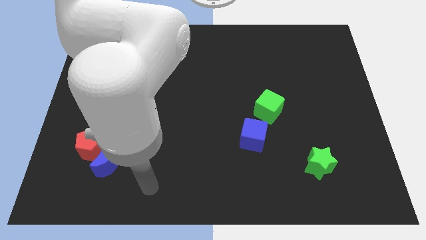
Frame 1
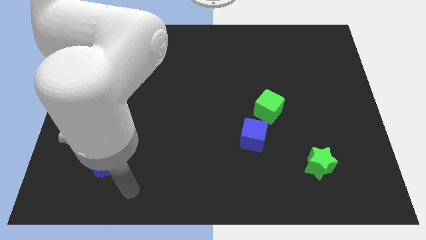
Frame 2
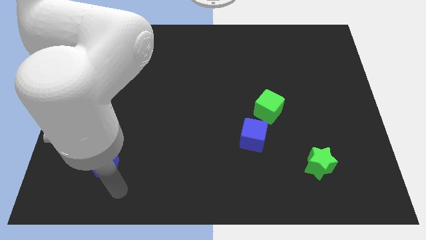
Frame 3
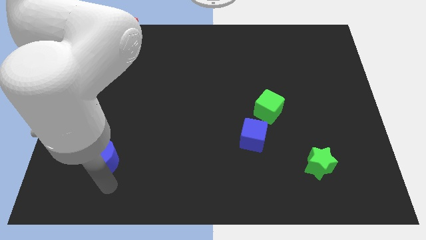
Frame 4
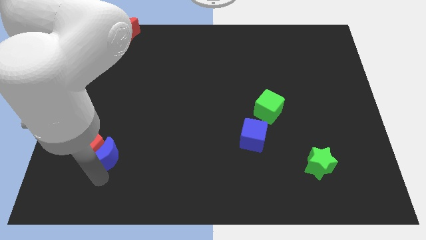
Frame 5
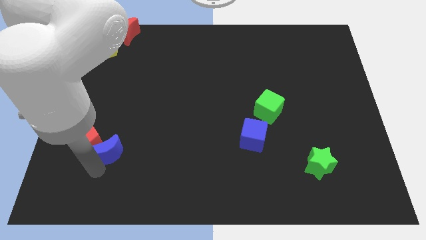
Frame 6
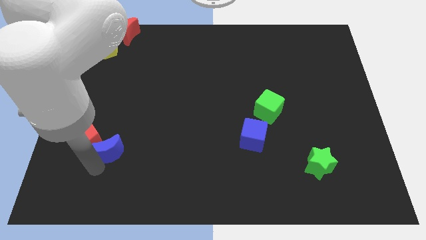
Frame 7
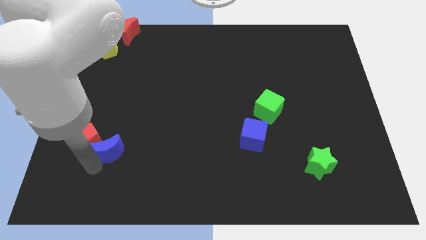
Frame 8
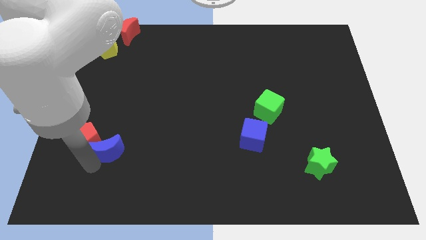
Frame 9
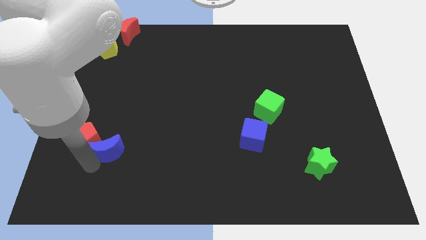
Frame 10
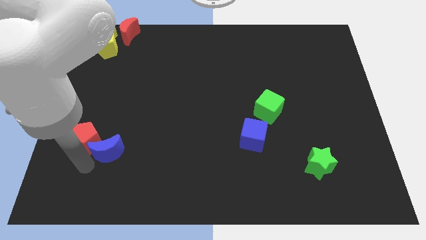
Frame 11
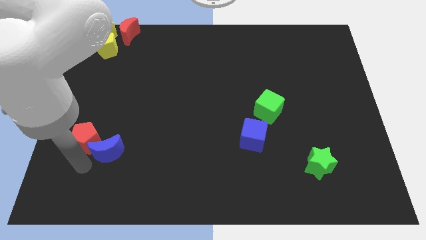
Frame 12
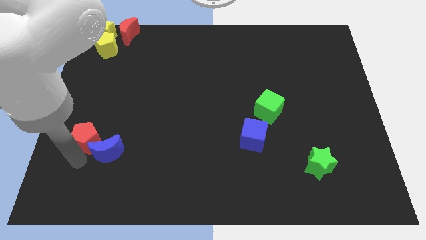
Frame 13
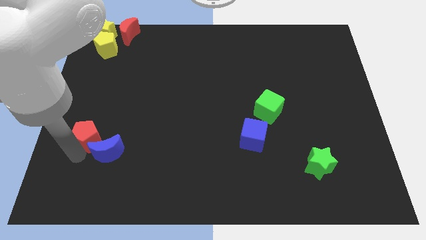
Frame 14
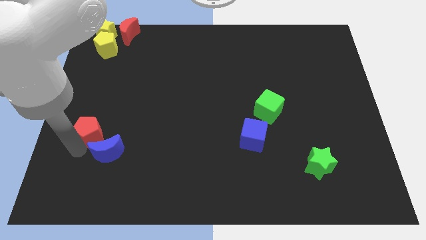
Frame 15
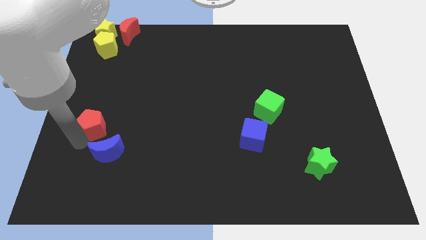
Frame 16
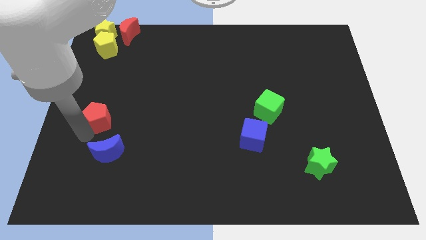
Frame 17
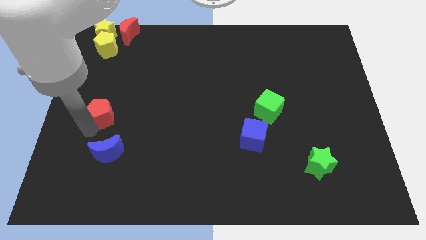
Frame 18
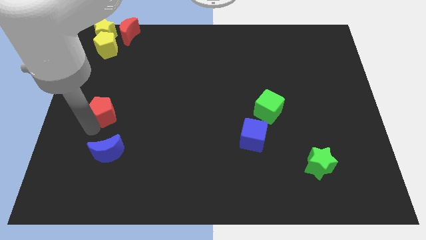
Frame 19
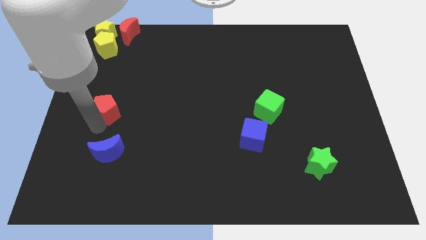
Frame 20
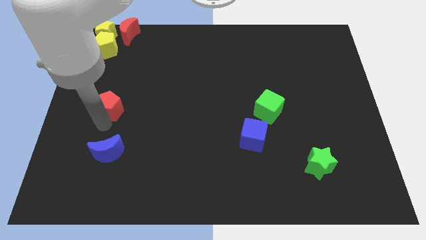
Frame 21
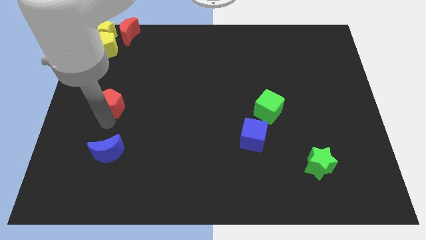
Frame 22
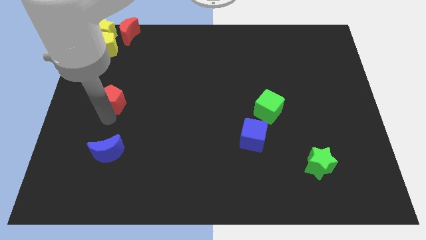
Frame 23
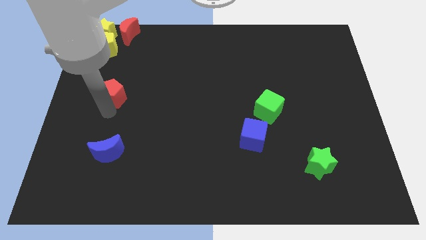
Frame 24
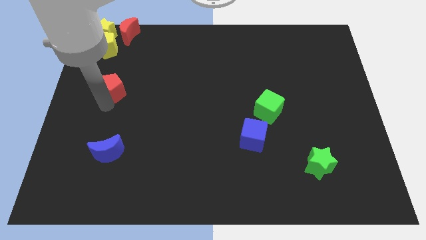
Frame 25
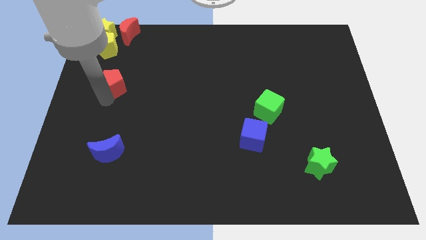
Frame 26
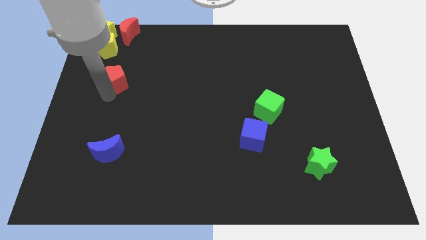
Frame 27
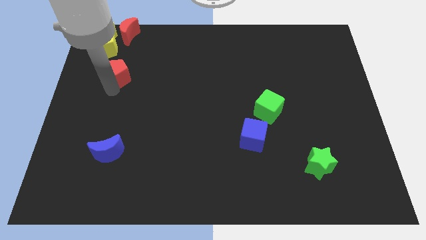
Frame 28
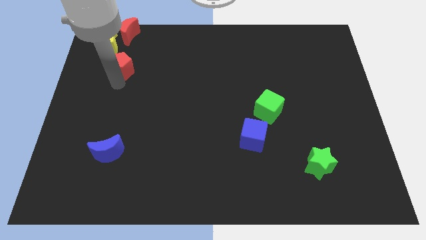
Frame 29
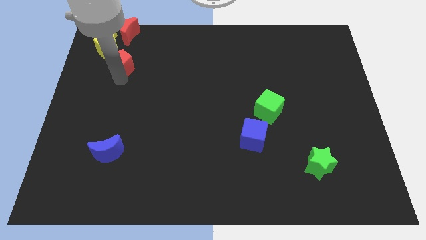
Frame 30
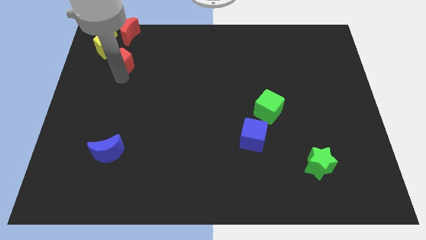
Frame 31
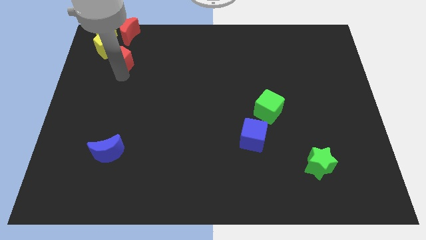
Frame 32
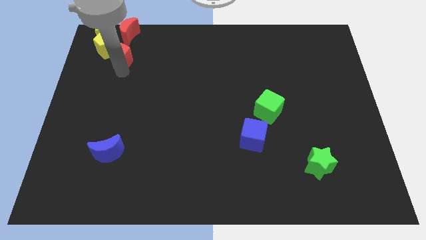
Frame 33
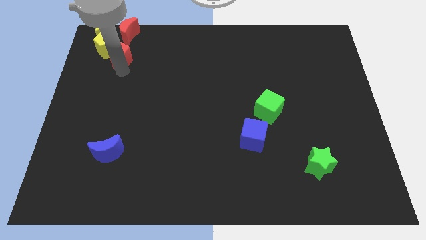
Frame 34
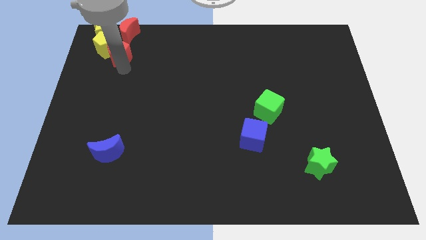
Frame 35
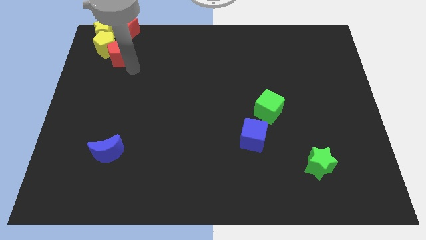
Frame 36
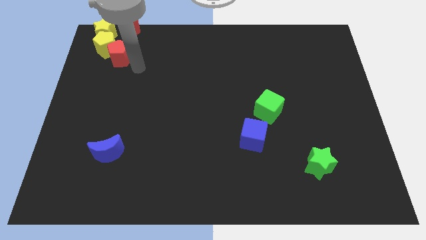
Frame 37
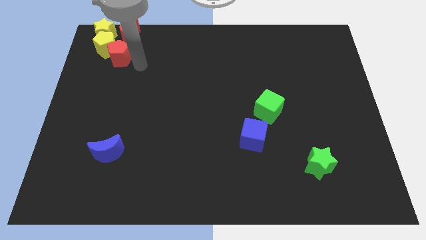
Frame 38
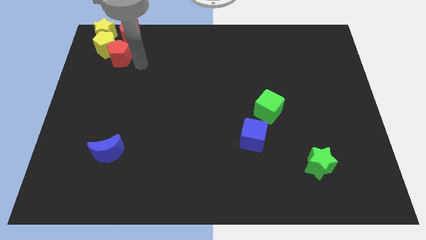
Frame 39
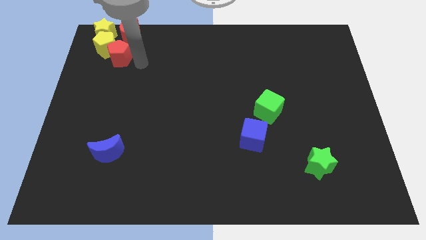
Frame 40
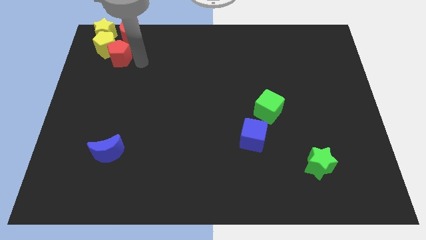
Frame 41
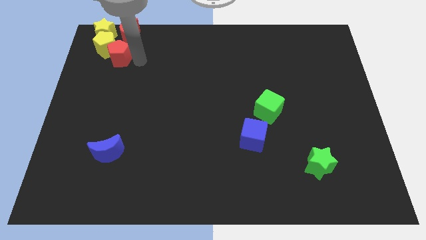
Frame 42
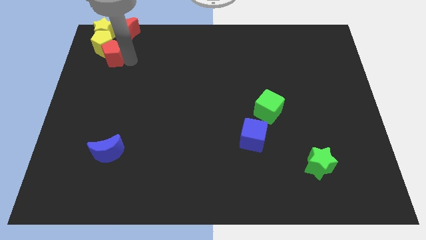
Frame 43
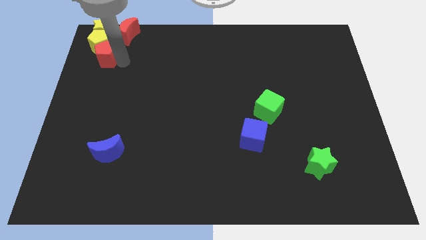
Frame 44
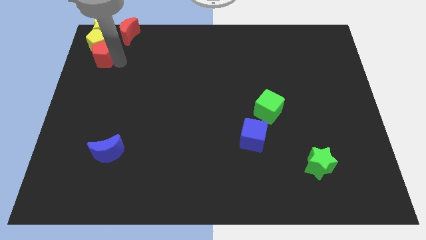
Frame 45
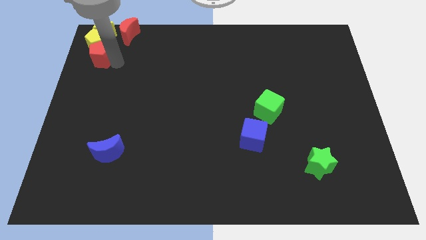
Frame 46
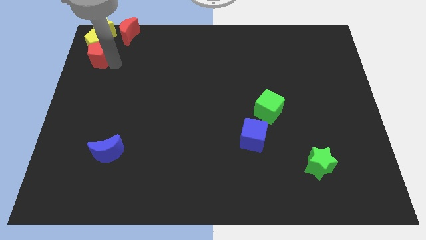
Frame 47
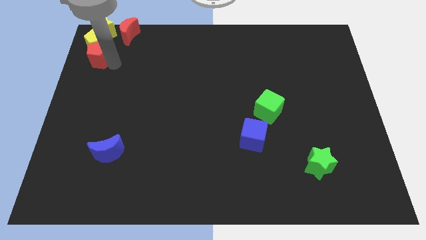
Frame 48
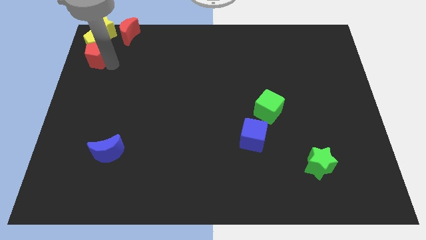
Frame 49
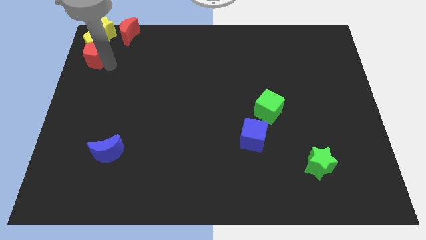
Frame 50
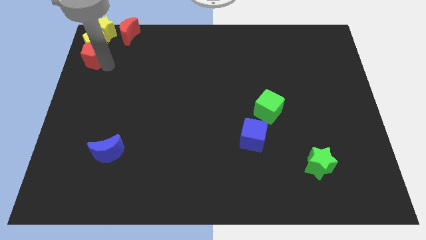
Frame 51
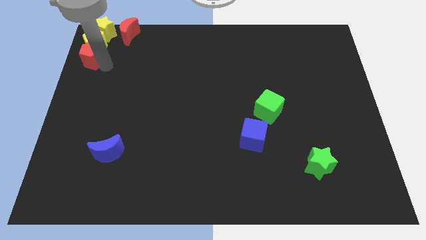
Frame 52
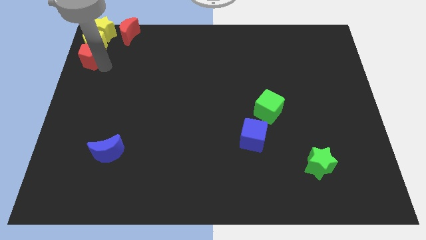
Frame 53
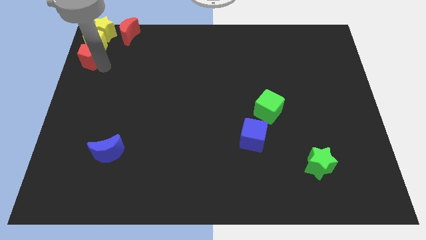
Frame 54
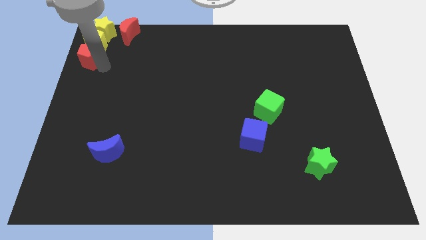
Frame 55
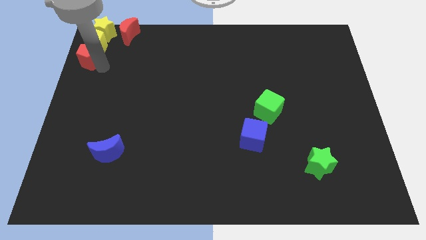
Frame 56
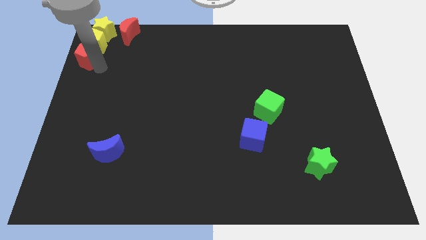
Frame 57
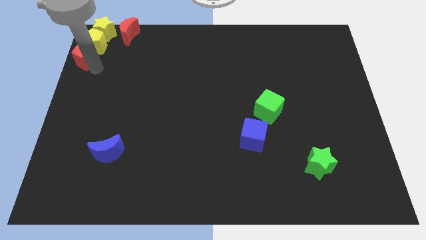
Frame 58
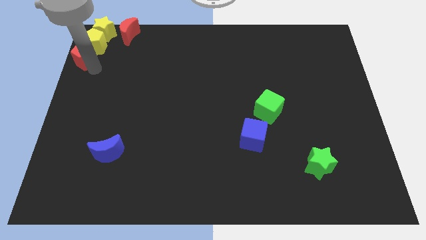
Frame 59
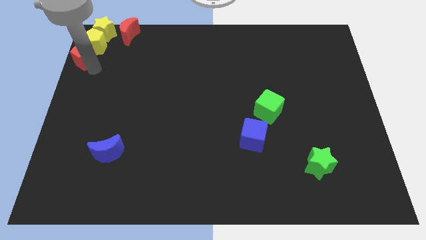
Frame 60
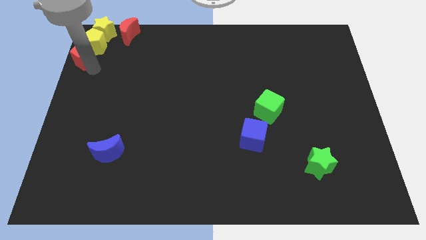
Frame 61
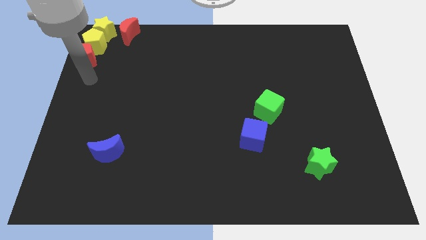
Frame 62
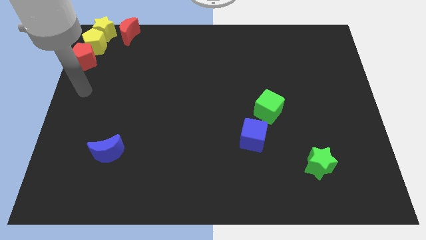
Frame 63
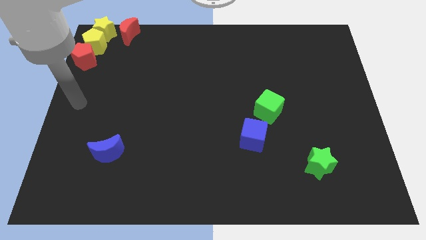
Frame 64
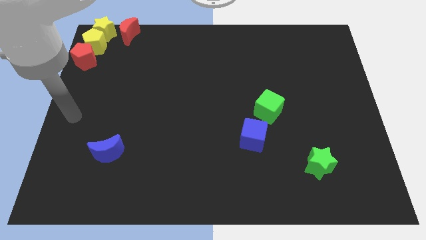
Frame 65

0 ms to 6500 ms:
push the red pentagon to the top left corner

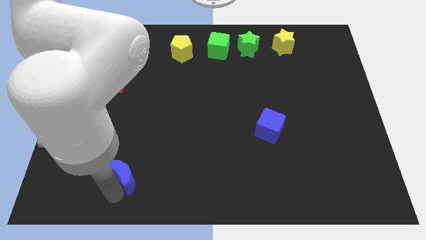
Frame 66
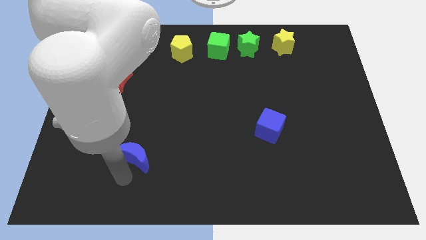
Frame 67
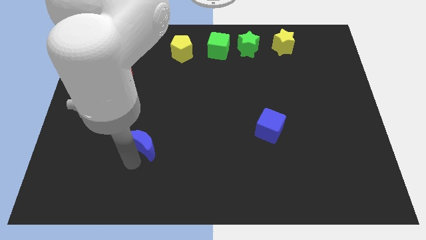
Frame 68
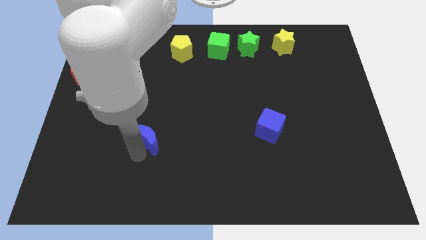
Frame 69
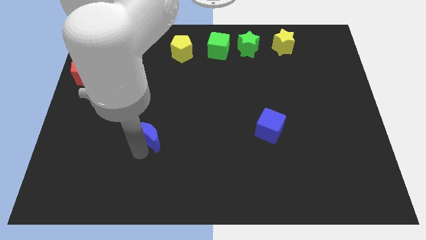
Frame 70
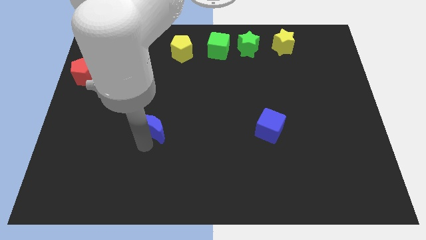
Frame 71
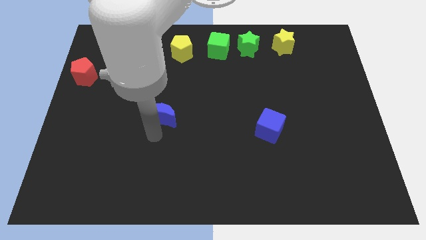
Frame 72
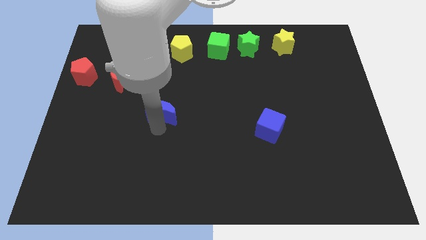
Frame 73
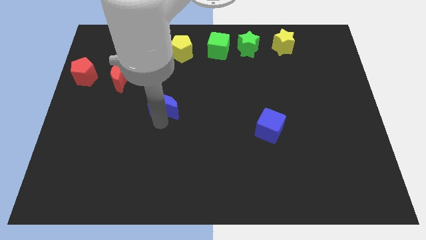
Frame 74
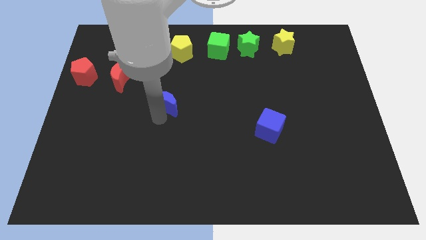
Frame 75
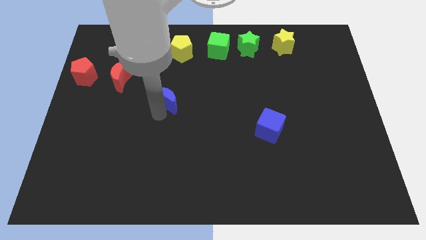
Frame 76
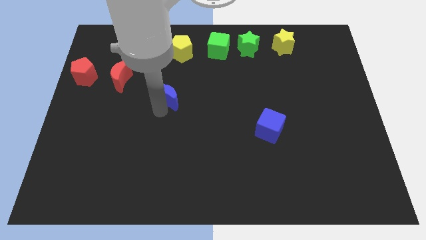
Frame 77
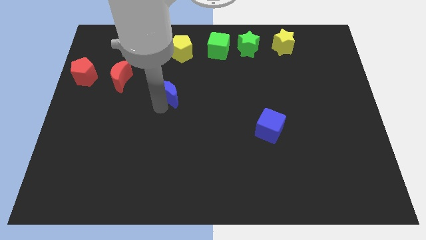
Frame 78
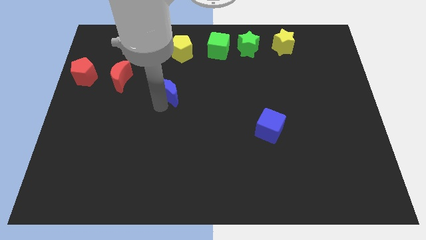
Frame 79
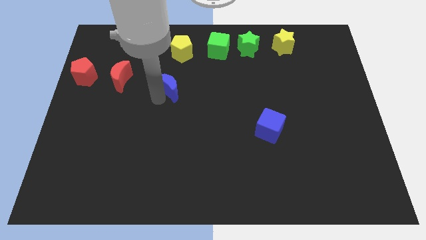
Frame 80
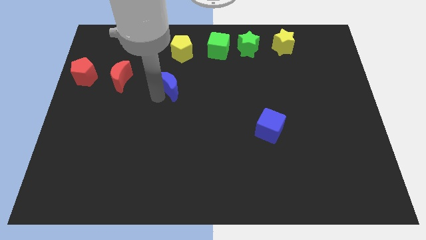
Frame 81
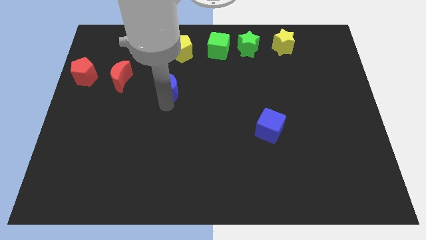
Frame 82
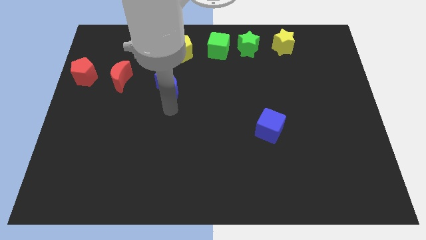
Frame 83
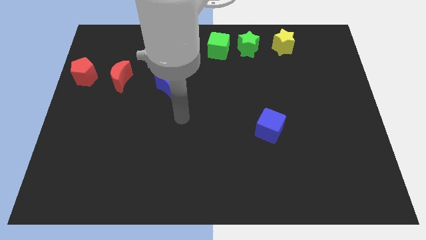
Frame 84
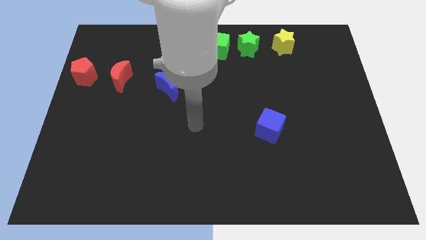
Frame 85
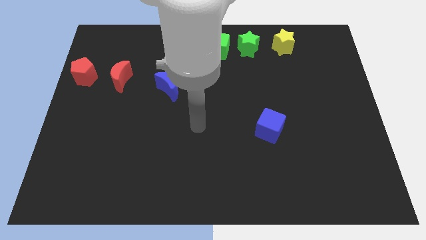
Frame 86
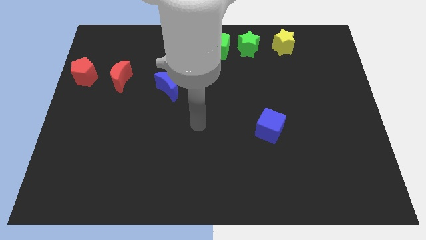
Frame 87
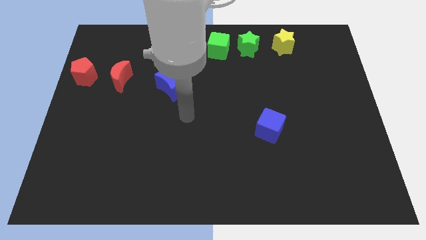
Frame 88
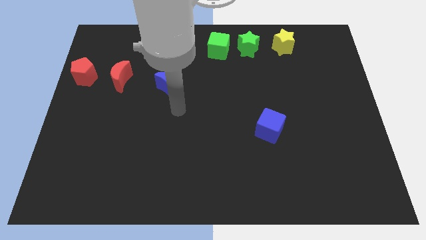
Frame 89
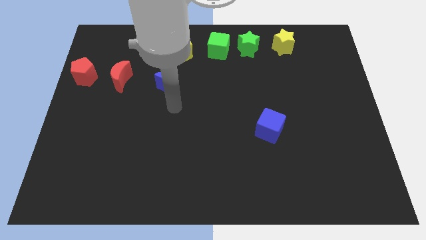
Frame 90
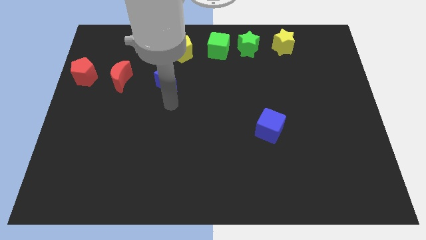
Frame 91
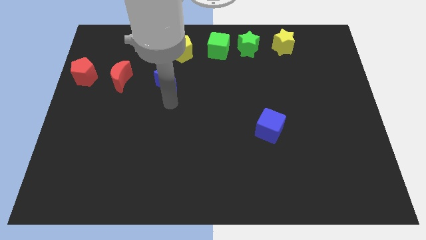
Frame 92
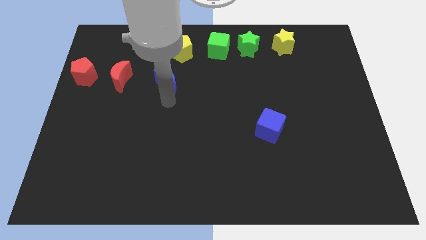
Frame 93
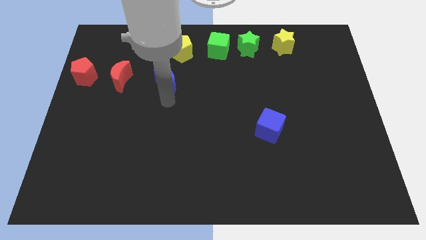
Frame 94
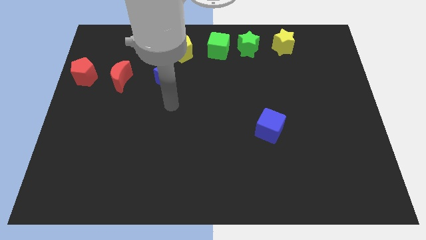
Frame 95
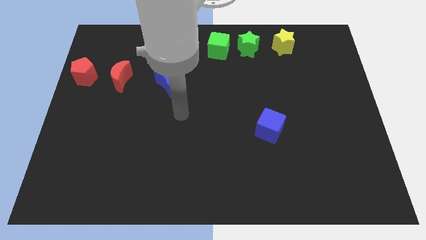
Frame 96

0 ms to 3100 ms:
place the blue moon on the right side of the red crescent horizontally
